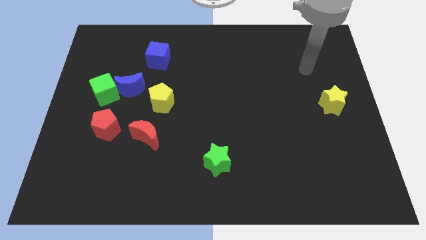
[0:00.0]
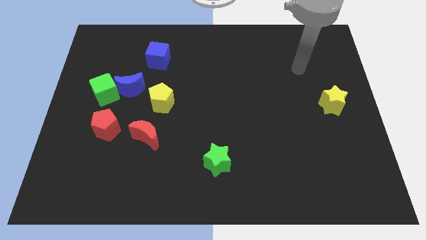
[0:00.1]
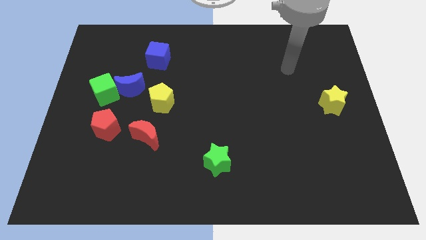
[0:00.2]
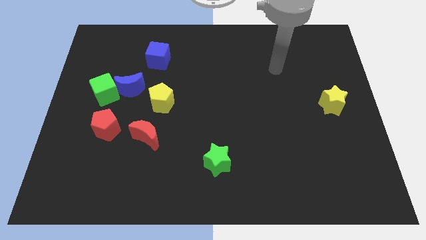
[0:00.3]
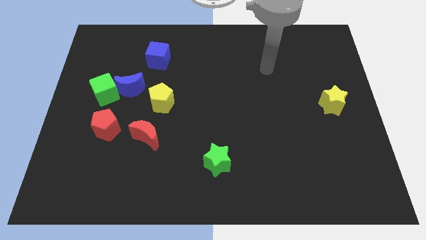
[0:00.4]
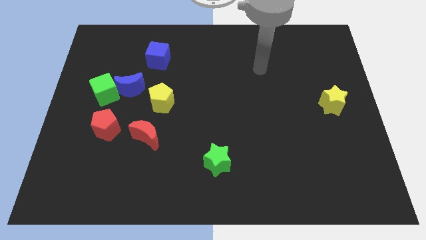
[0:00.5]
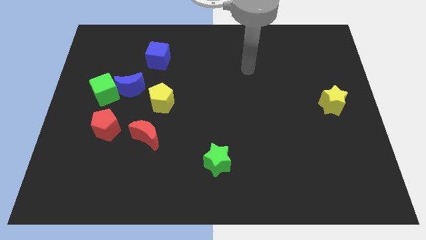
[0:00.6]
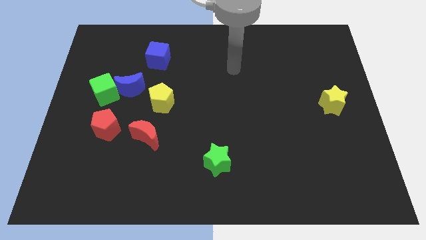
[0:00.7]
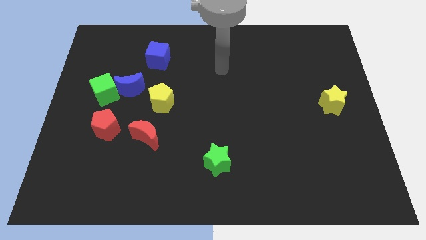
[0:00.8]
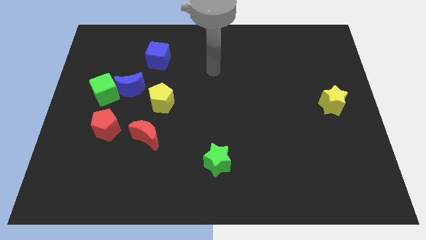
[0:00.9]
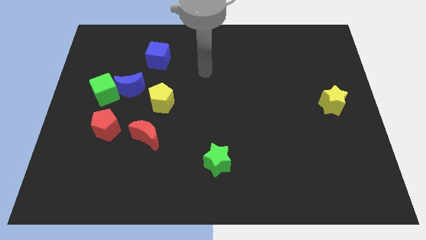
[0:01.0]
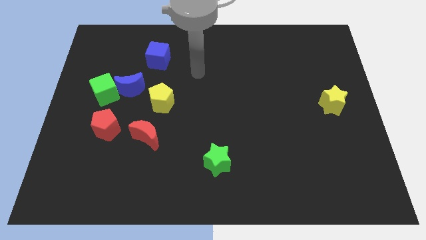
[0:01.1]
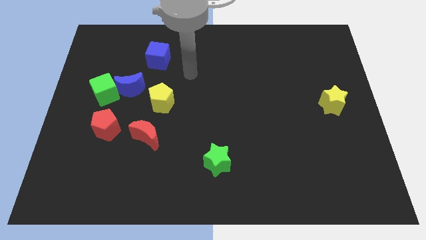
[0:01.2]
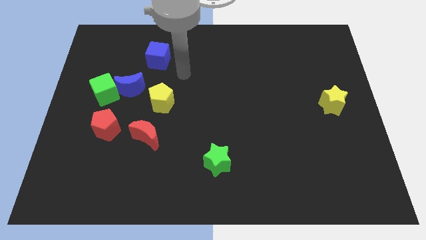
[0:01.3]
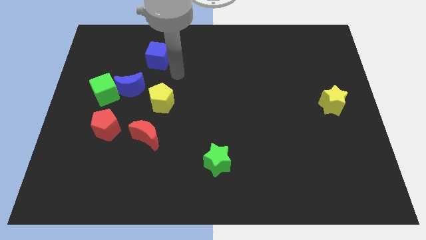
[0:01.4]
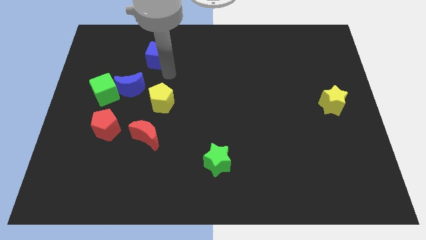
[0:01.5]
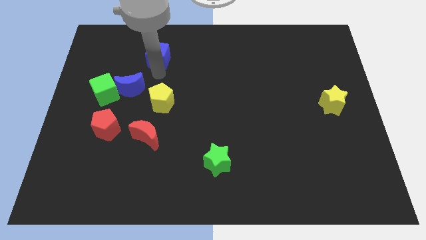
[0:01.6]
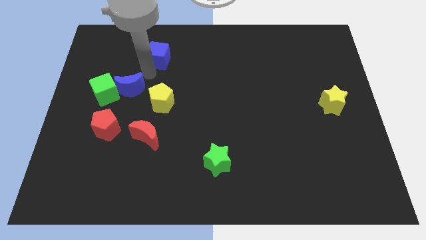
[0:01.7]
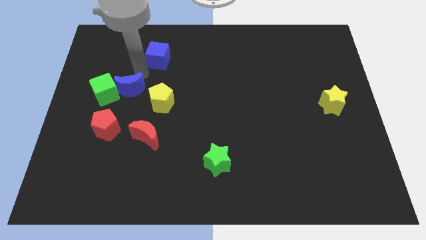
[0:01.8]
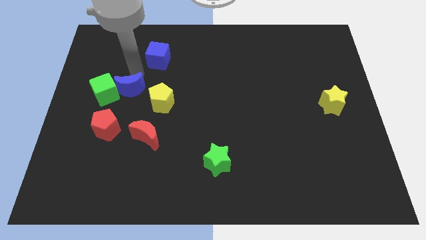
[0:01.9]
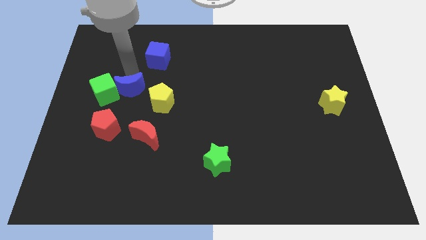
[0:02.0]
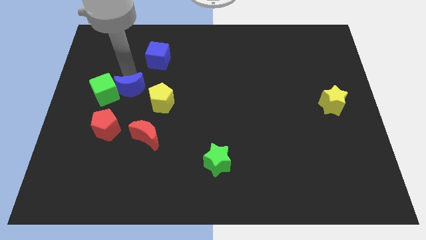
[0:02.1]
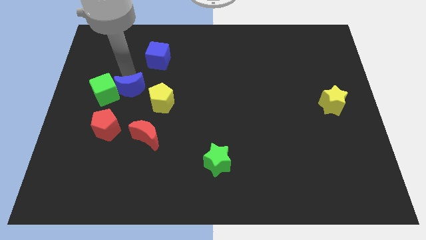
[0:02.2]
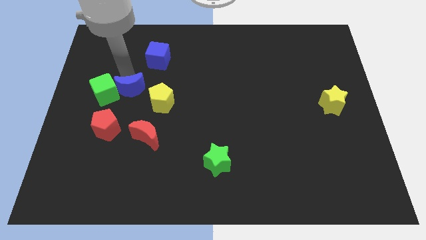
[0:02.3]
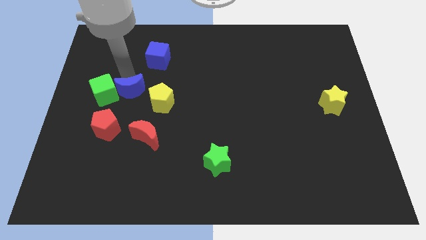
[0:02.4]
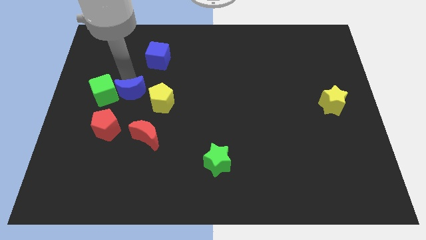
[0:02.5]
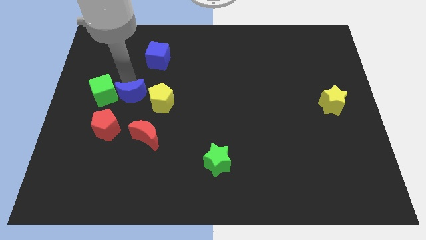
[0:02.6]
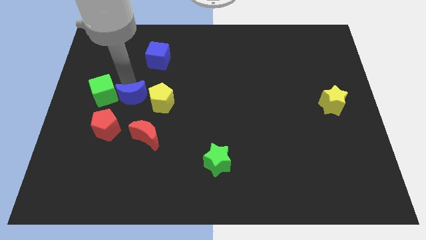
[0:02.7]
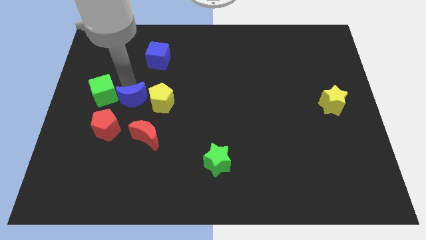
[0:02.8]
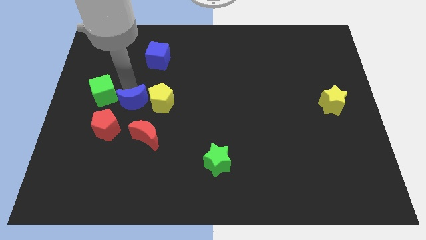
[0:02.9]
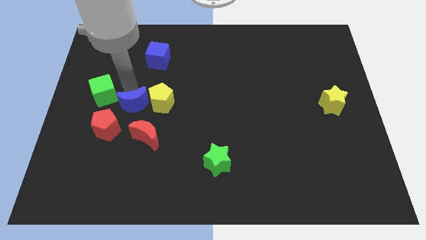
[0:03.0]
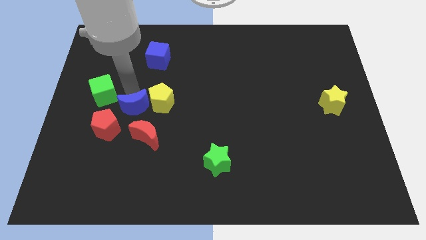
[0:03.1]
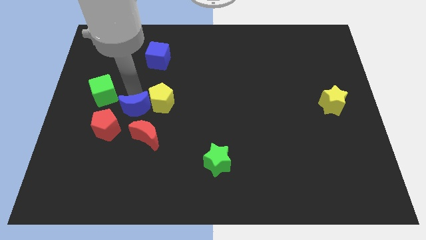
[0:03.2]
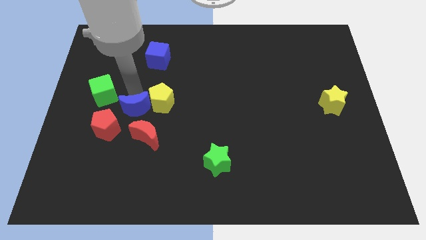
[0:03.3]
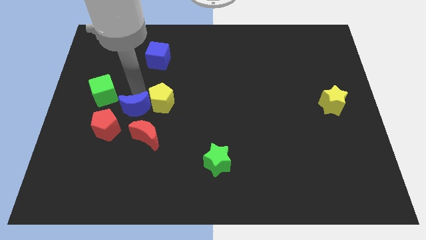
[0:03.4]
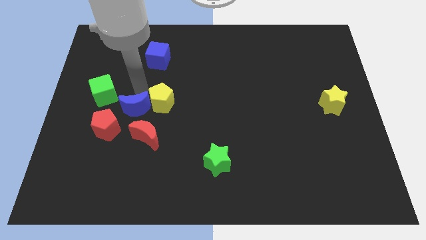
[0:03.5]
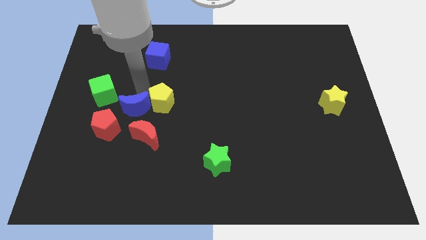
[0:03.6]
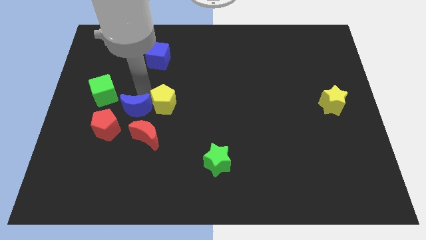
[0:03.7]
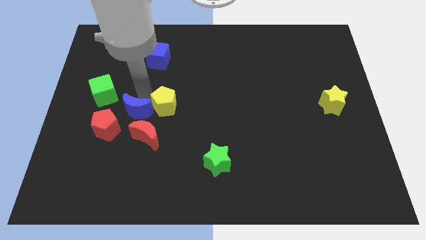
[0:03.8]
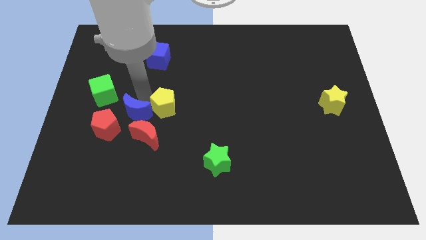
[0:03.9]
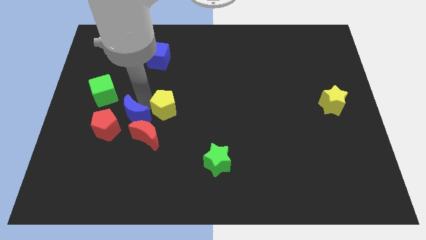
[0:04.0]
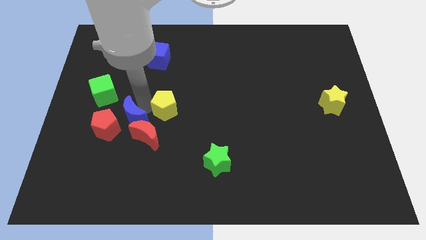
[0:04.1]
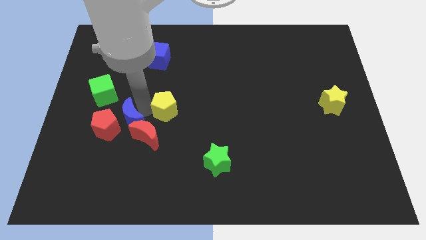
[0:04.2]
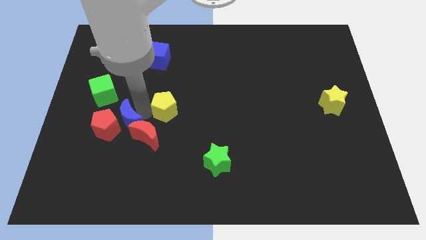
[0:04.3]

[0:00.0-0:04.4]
put the blue moon to the red pentagon

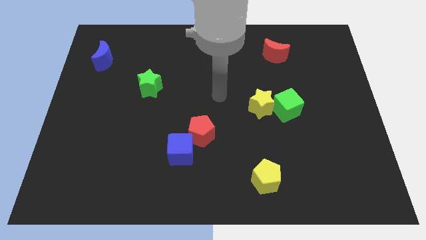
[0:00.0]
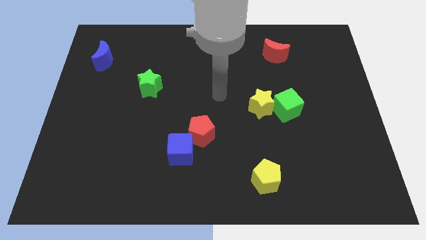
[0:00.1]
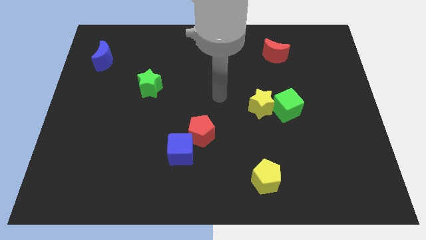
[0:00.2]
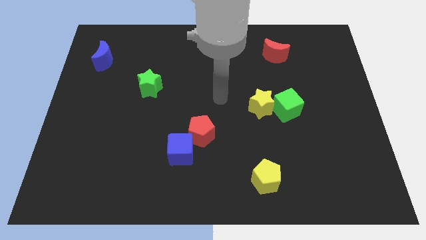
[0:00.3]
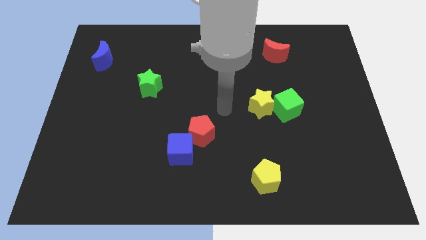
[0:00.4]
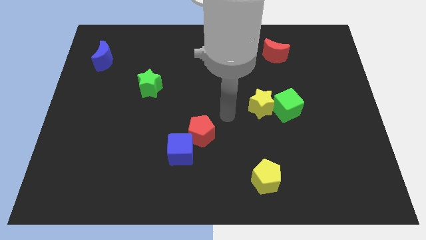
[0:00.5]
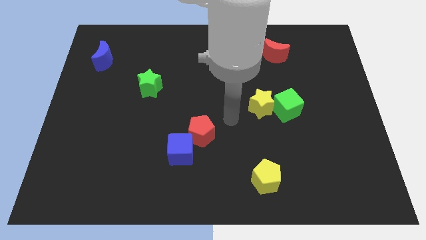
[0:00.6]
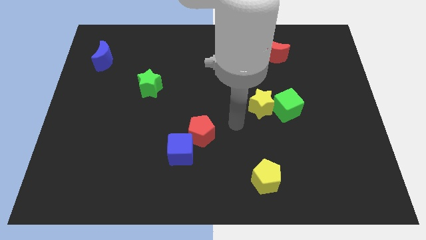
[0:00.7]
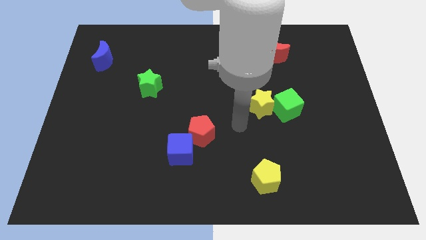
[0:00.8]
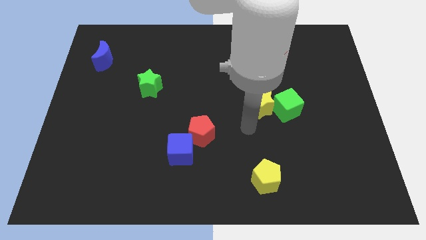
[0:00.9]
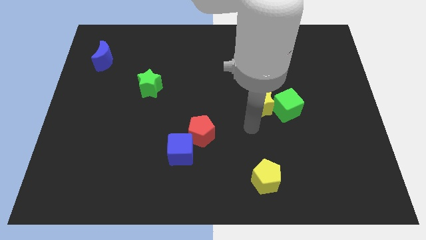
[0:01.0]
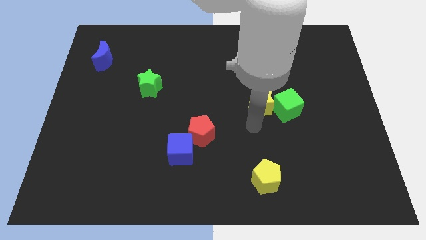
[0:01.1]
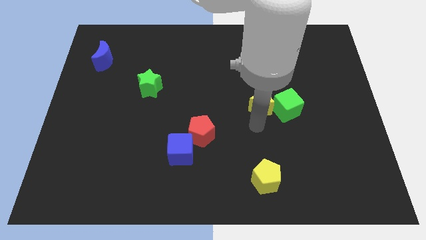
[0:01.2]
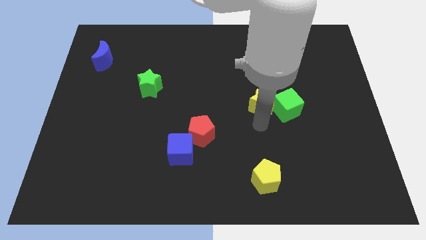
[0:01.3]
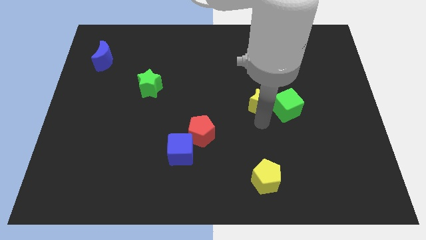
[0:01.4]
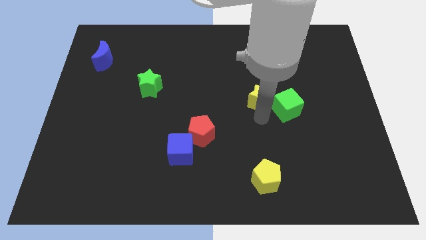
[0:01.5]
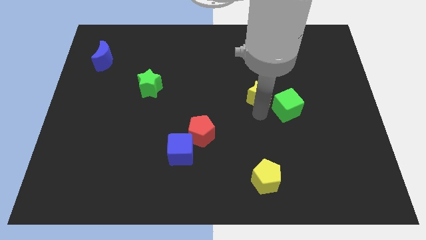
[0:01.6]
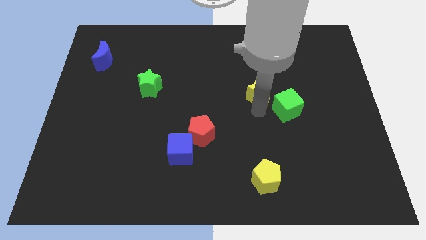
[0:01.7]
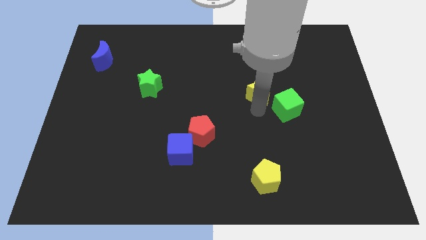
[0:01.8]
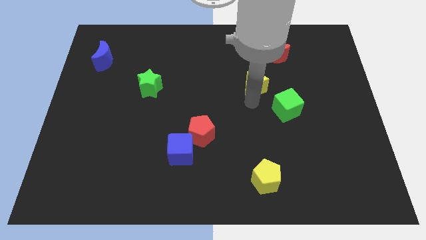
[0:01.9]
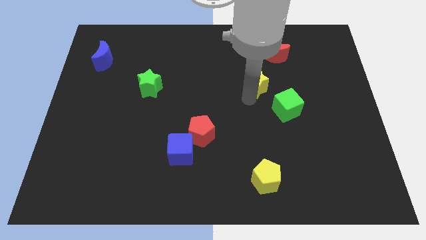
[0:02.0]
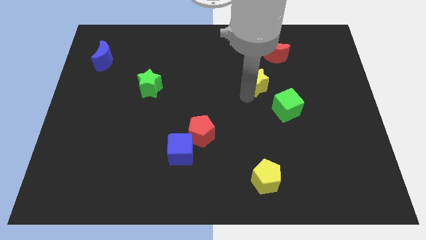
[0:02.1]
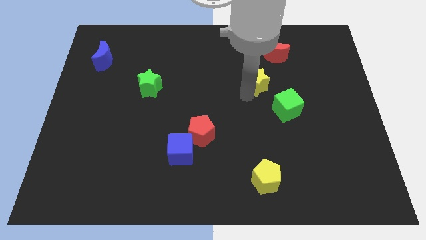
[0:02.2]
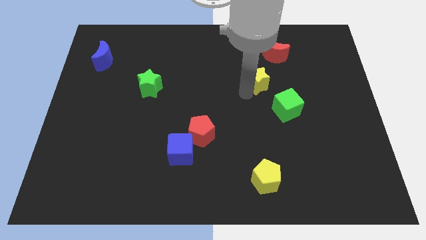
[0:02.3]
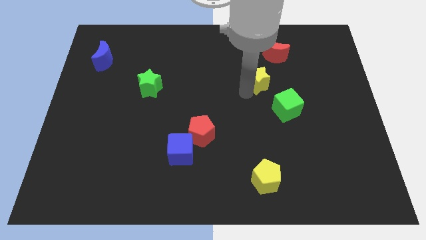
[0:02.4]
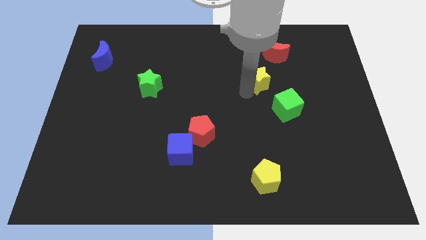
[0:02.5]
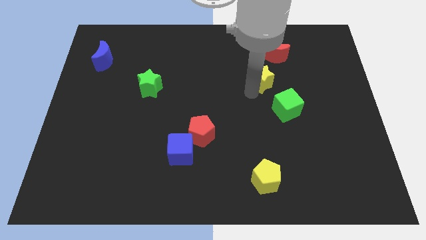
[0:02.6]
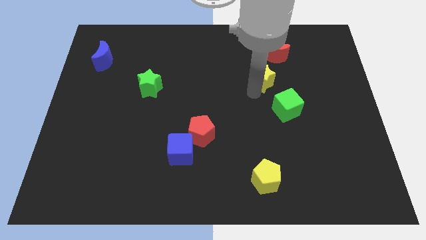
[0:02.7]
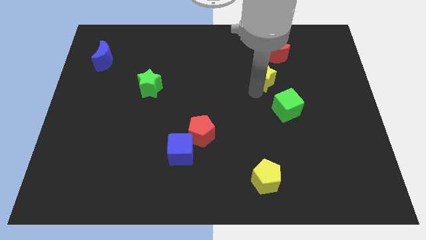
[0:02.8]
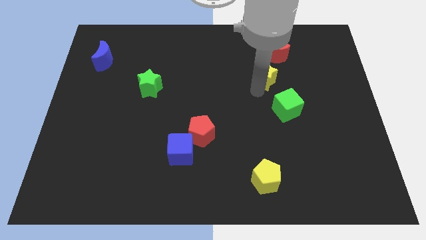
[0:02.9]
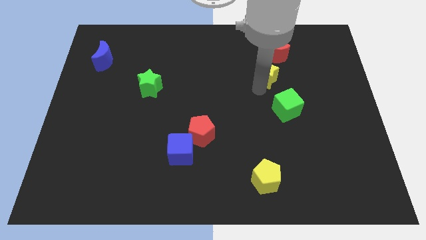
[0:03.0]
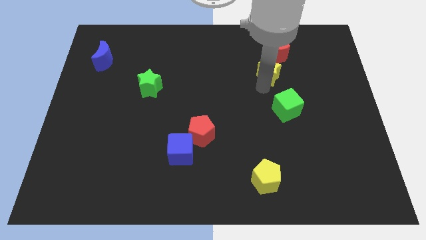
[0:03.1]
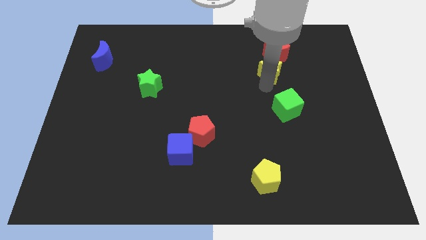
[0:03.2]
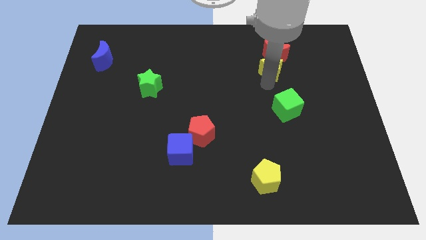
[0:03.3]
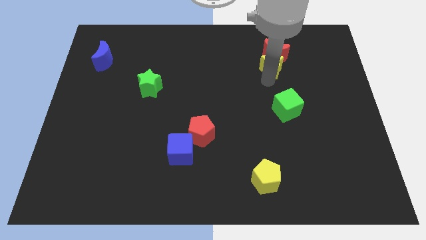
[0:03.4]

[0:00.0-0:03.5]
move the yellow star next to the red moon

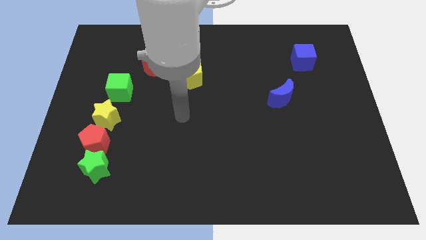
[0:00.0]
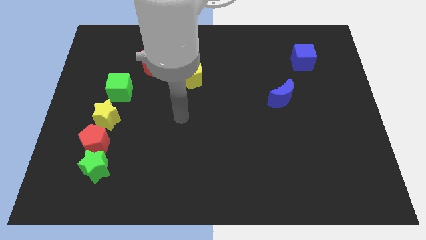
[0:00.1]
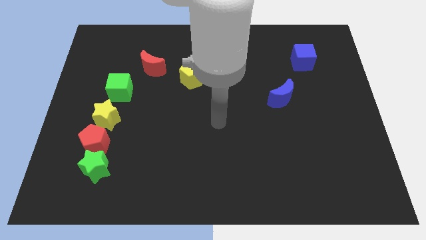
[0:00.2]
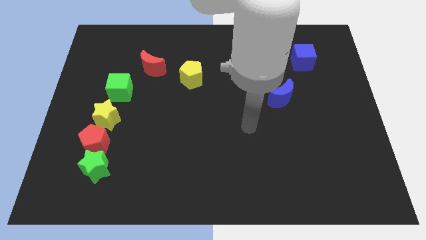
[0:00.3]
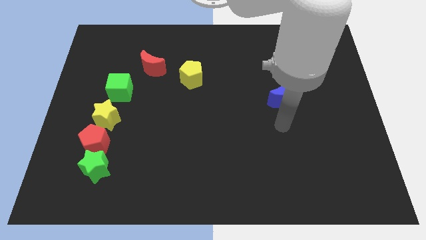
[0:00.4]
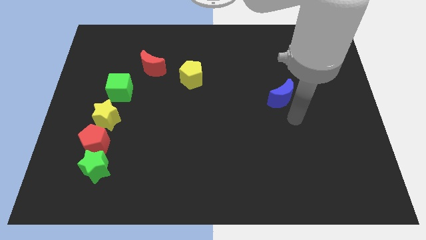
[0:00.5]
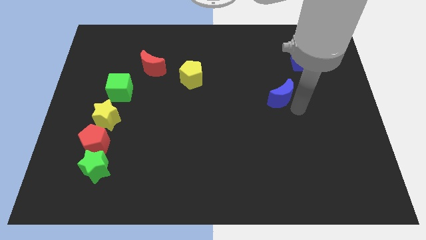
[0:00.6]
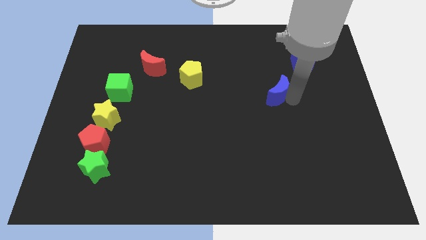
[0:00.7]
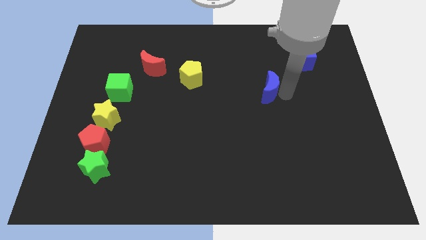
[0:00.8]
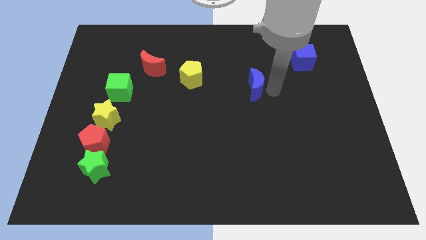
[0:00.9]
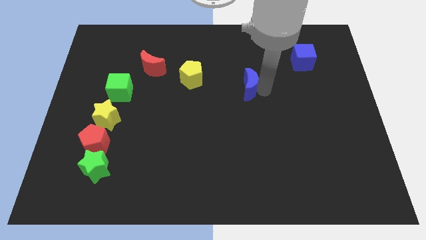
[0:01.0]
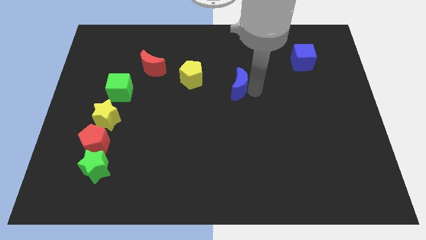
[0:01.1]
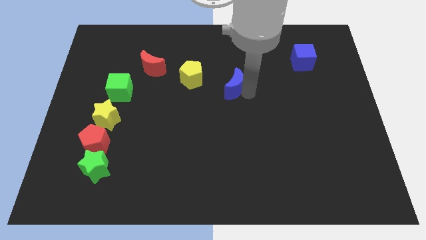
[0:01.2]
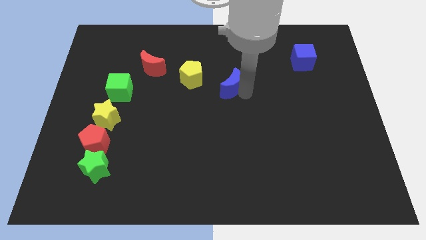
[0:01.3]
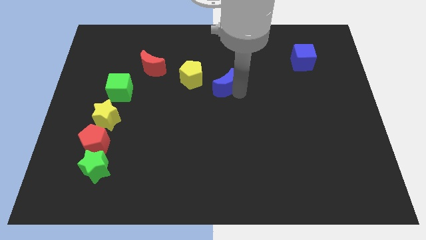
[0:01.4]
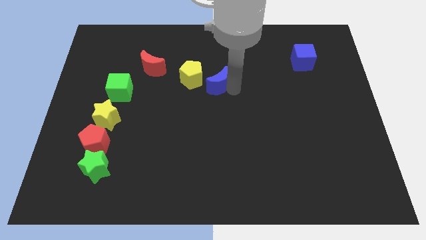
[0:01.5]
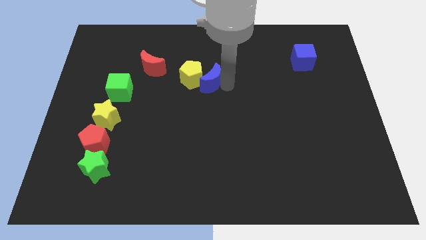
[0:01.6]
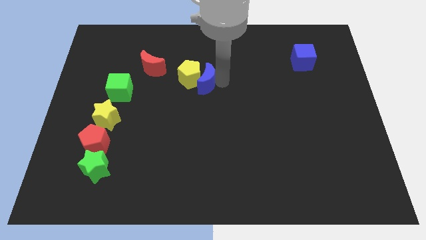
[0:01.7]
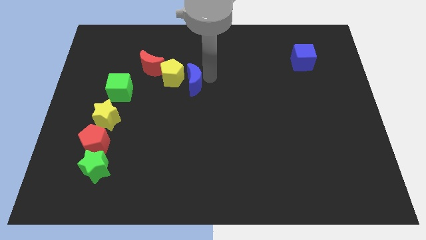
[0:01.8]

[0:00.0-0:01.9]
put the blue moon close to the yellow pentagon
